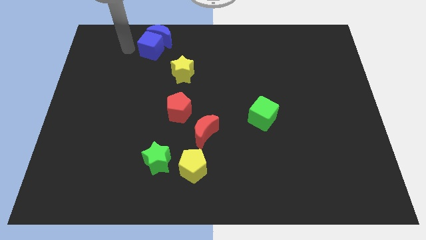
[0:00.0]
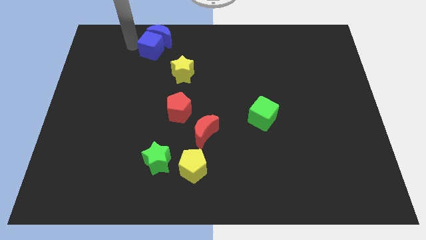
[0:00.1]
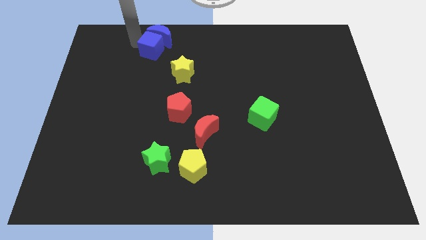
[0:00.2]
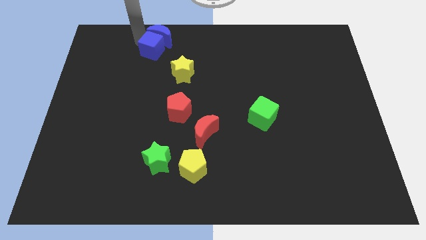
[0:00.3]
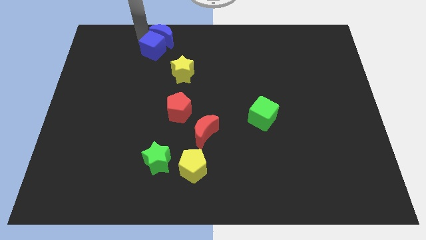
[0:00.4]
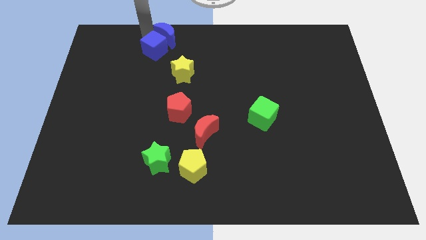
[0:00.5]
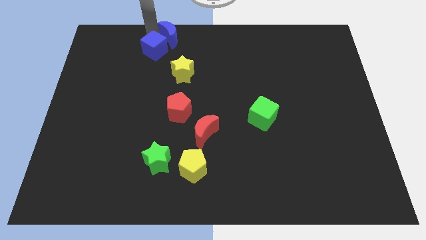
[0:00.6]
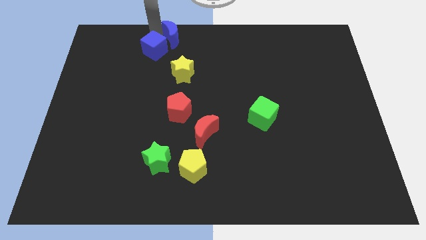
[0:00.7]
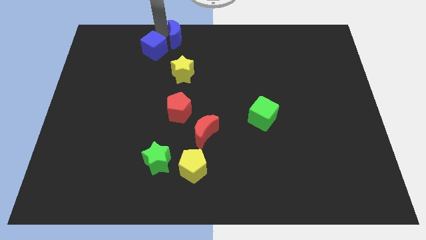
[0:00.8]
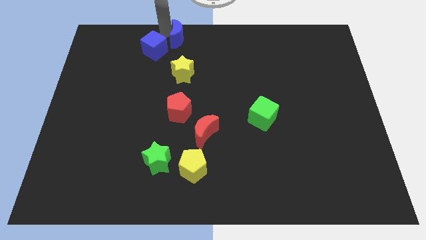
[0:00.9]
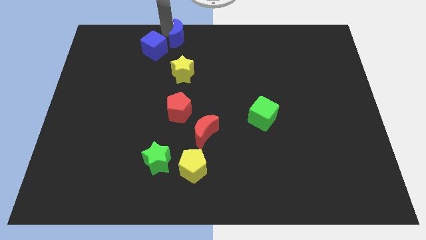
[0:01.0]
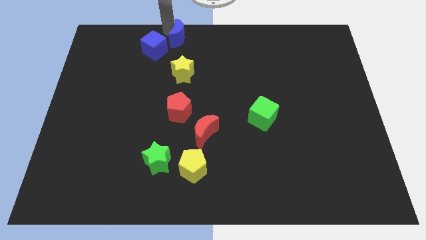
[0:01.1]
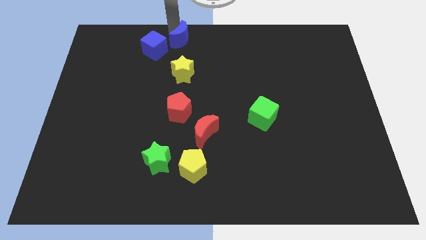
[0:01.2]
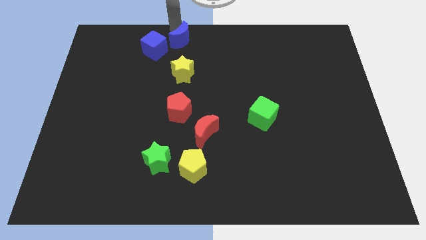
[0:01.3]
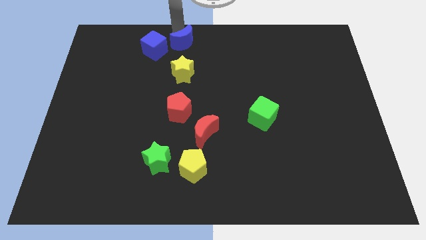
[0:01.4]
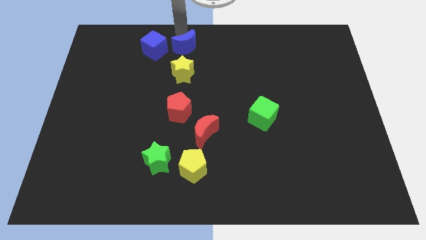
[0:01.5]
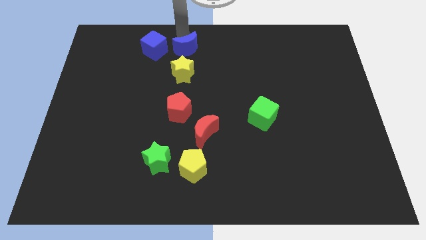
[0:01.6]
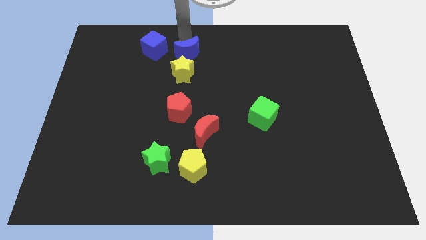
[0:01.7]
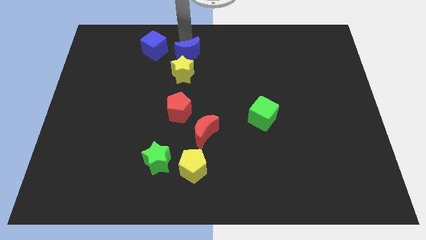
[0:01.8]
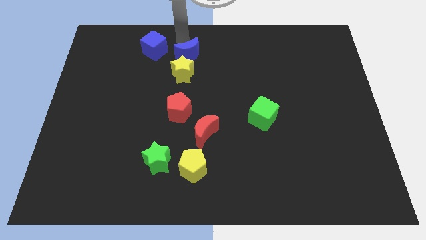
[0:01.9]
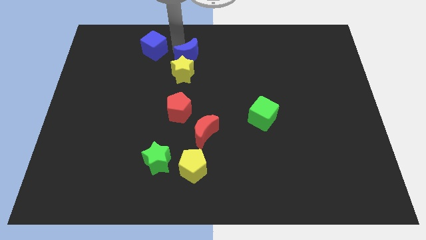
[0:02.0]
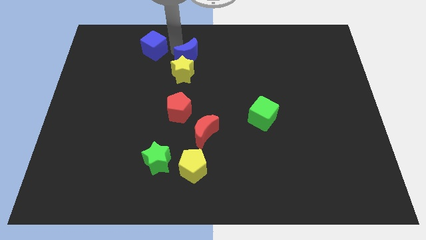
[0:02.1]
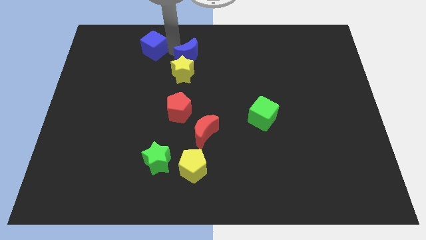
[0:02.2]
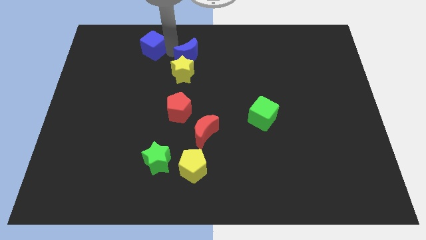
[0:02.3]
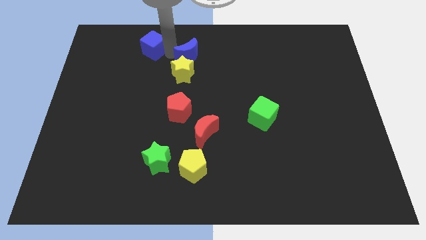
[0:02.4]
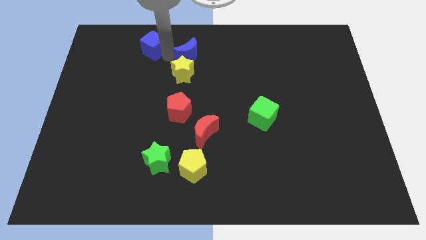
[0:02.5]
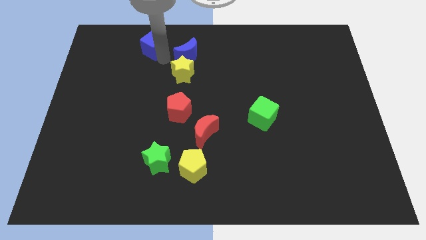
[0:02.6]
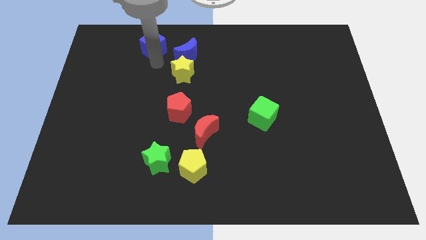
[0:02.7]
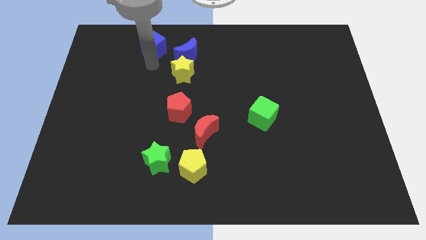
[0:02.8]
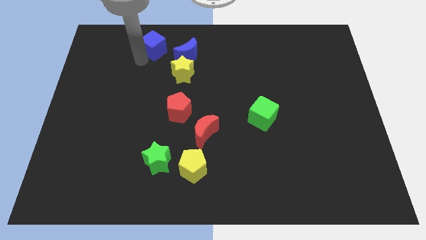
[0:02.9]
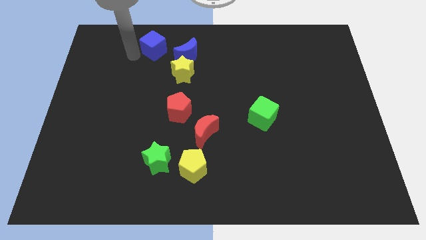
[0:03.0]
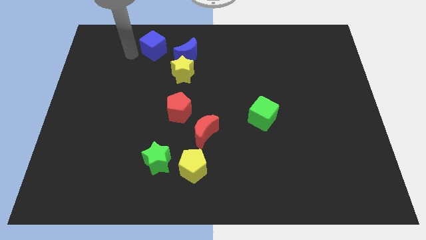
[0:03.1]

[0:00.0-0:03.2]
slide the blue moon above the yellow star

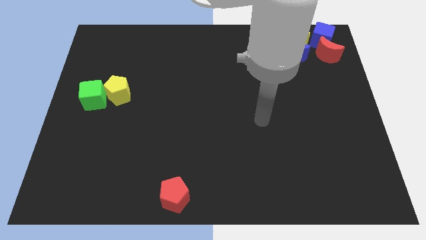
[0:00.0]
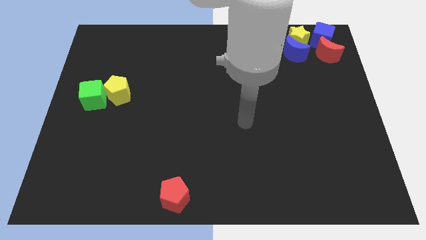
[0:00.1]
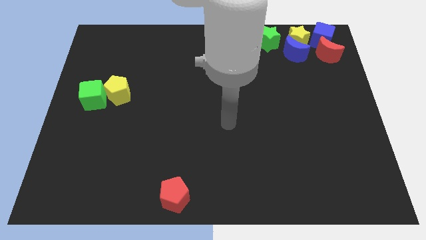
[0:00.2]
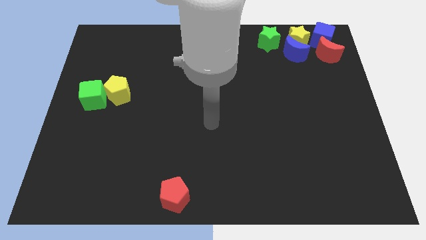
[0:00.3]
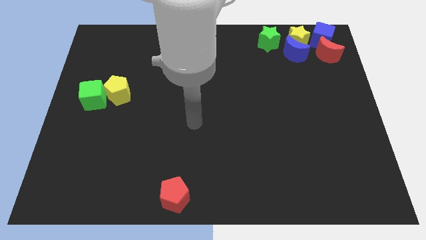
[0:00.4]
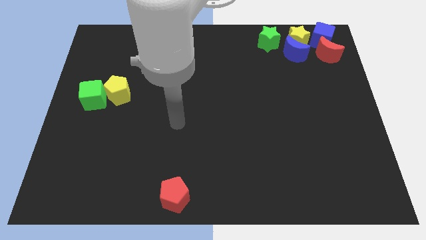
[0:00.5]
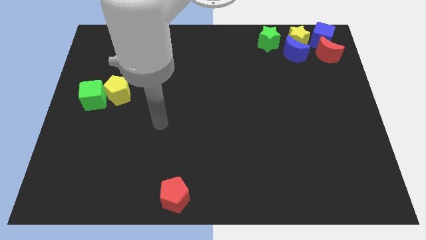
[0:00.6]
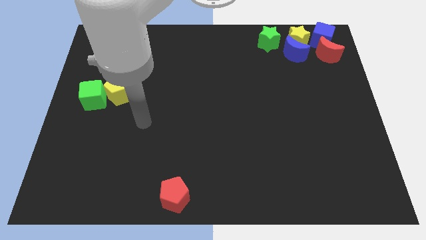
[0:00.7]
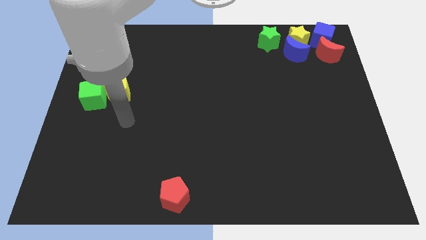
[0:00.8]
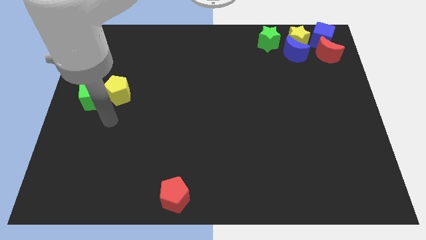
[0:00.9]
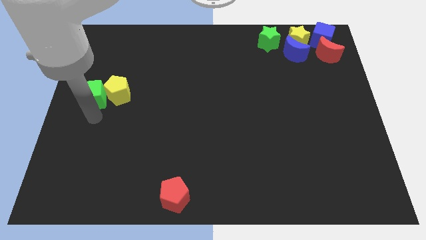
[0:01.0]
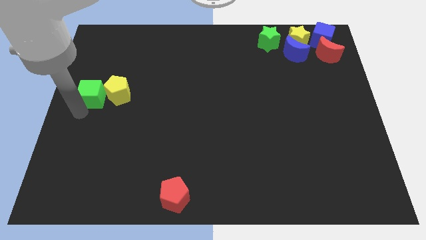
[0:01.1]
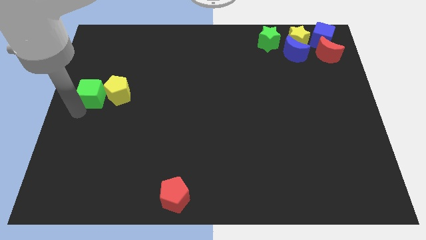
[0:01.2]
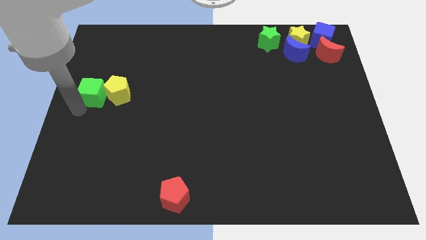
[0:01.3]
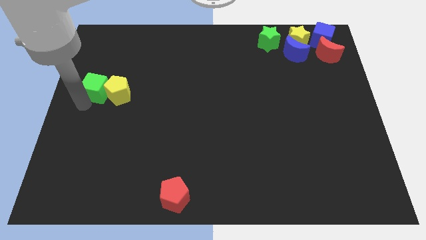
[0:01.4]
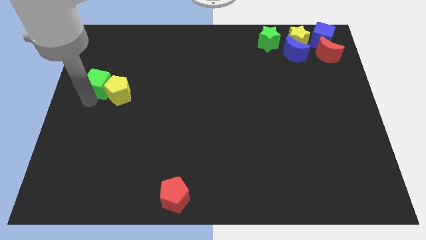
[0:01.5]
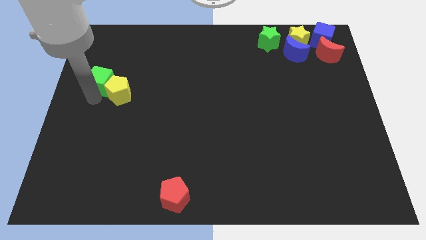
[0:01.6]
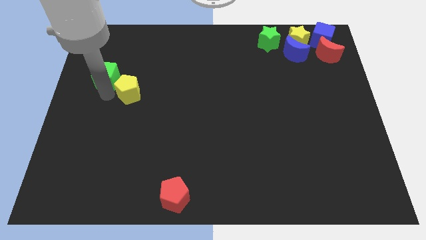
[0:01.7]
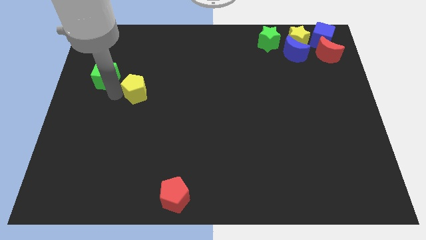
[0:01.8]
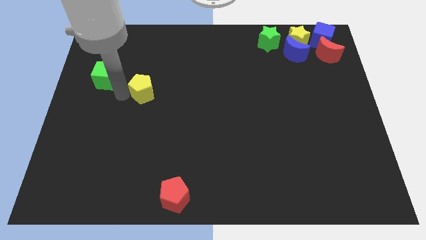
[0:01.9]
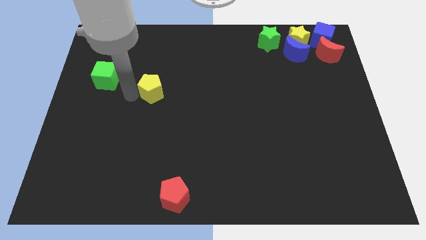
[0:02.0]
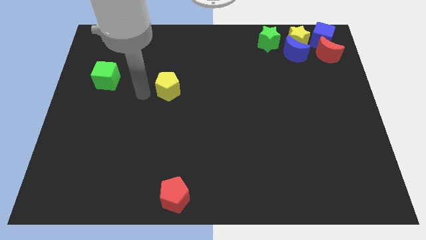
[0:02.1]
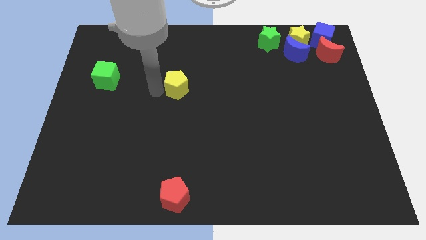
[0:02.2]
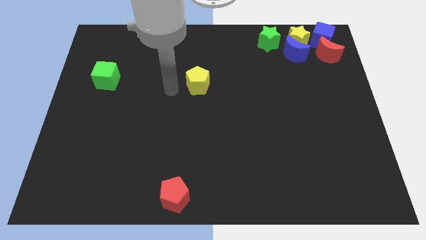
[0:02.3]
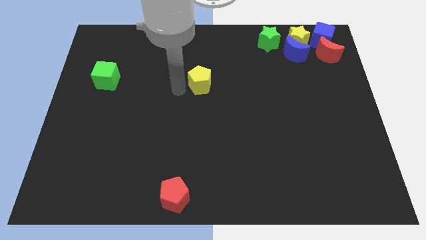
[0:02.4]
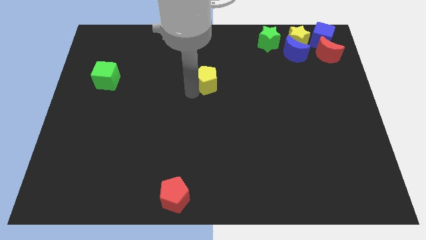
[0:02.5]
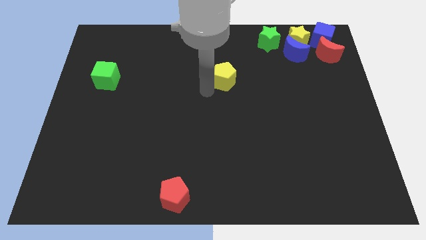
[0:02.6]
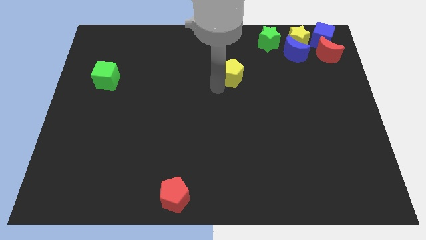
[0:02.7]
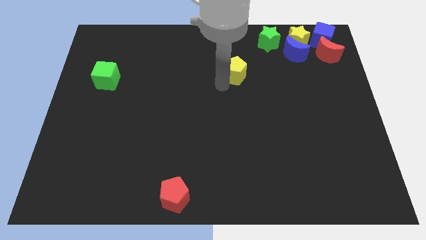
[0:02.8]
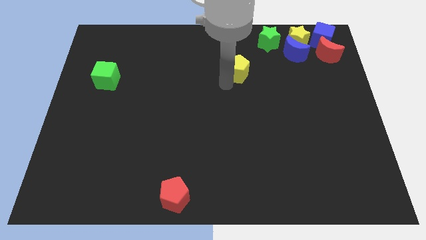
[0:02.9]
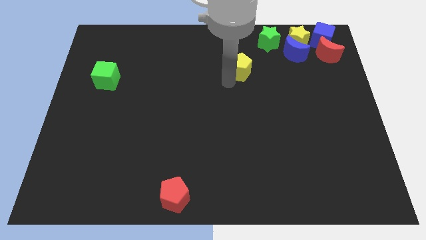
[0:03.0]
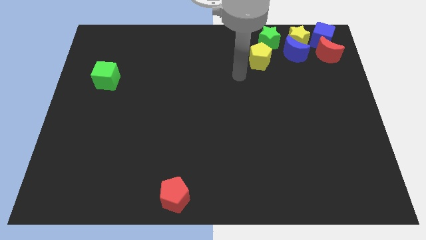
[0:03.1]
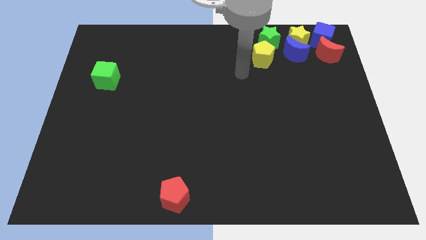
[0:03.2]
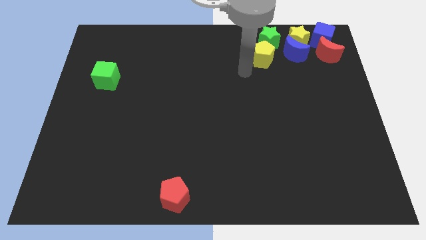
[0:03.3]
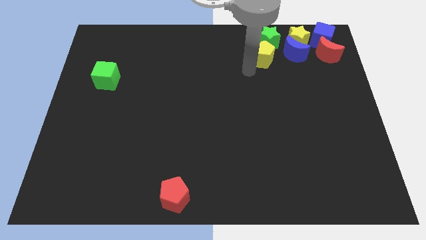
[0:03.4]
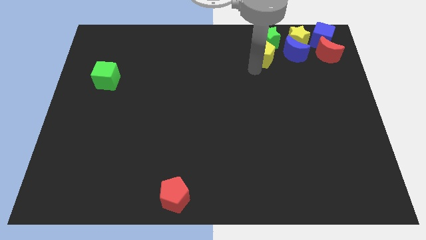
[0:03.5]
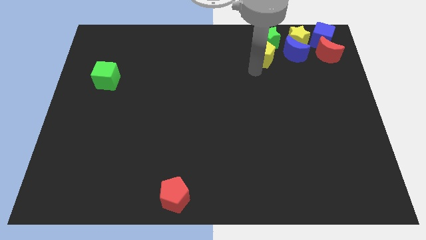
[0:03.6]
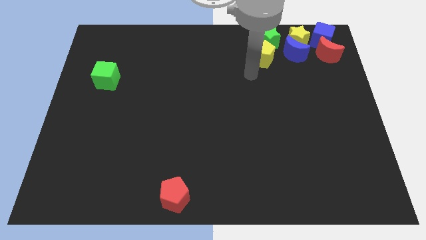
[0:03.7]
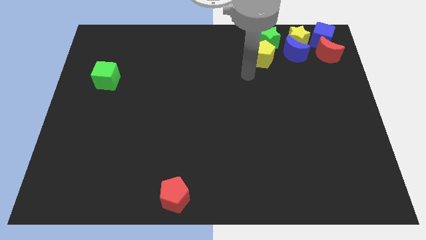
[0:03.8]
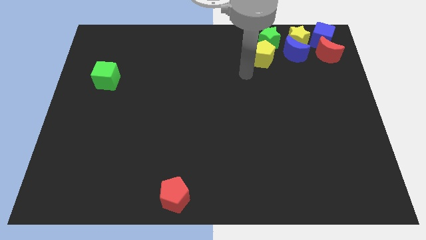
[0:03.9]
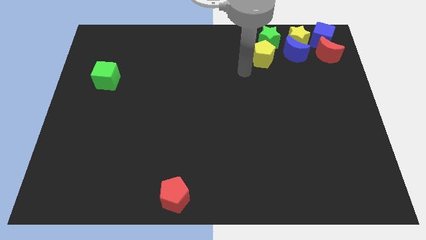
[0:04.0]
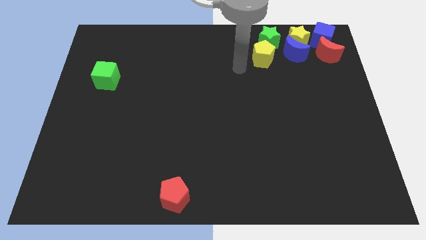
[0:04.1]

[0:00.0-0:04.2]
move the yellow pentagon to the bottom of the green star

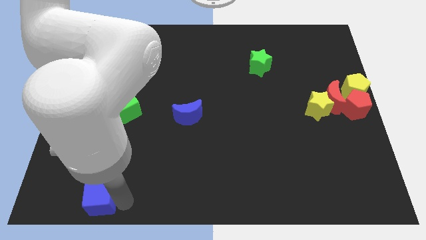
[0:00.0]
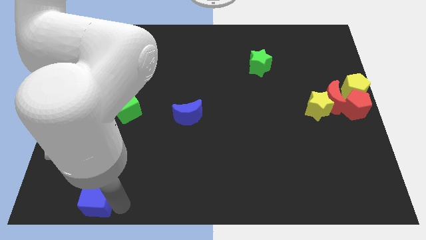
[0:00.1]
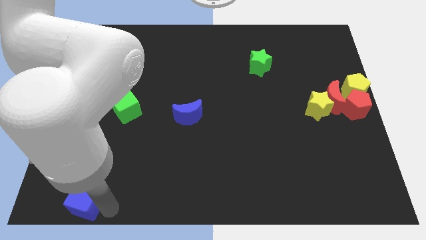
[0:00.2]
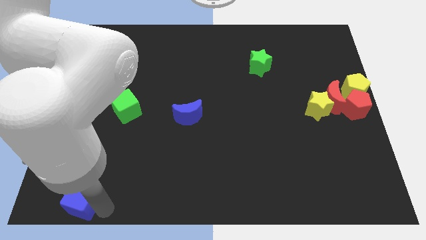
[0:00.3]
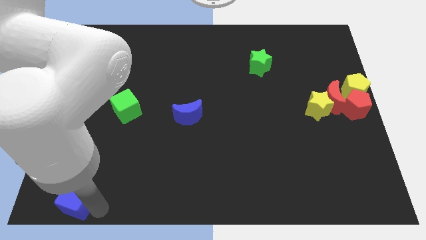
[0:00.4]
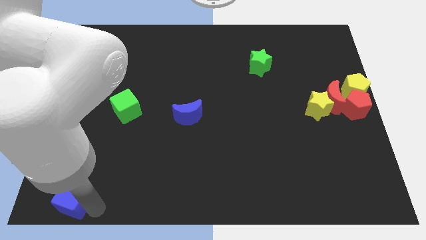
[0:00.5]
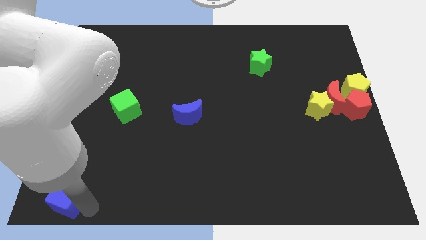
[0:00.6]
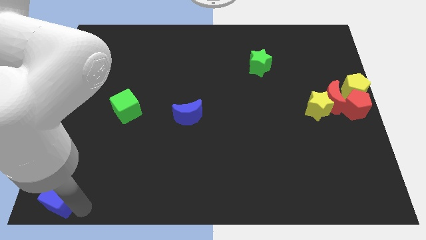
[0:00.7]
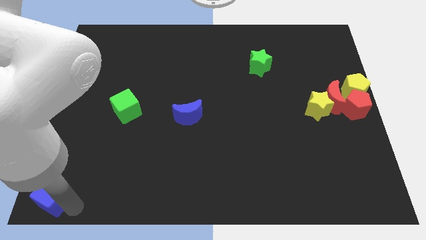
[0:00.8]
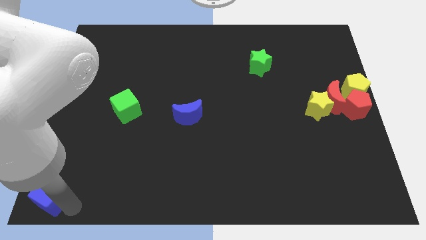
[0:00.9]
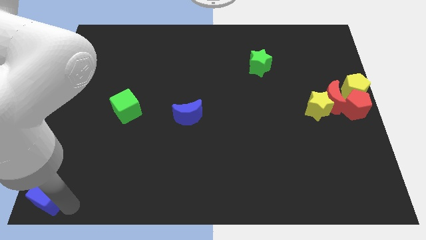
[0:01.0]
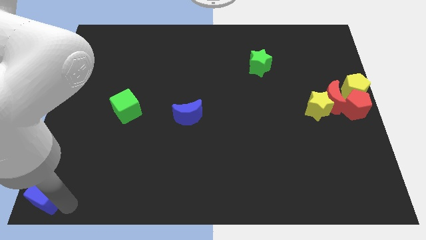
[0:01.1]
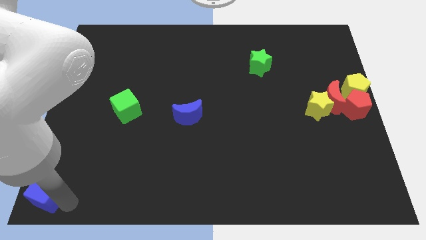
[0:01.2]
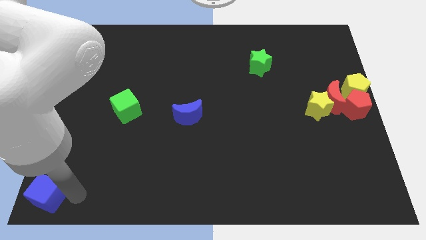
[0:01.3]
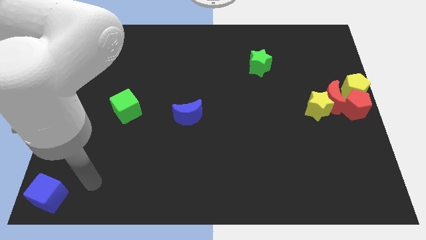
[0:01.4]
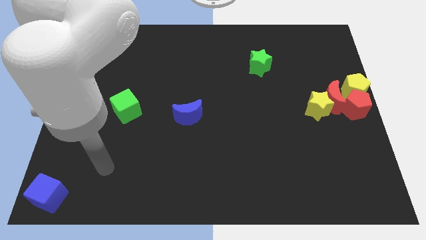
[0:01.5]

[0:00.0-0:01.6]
move the blue cube towards the bottom left corner of the board
